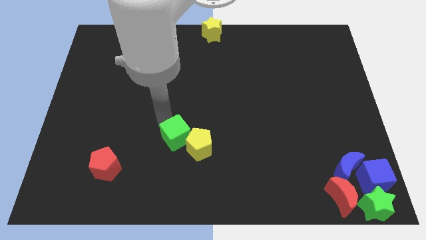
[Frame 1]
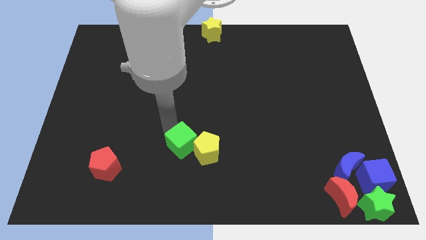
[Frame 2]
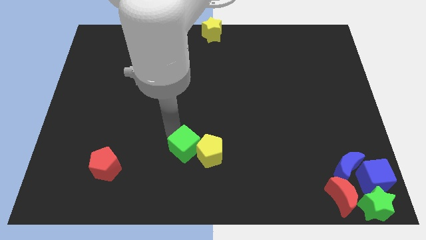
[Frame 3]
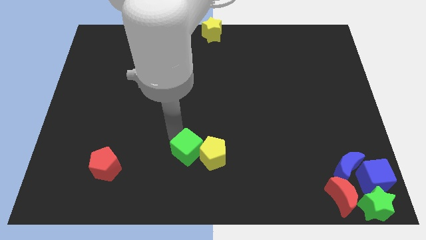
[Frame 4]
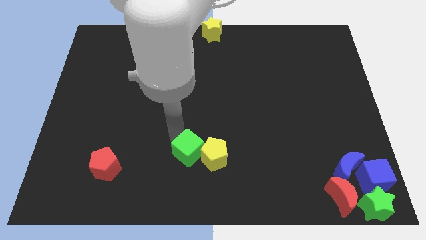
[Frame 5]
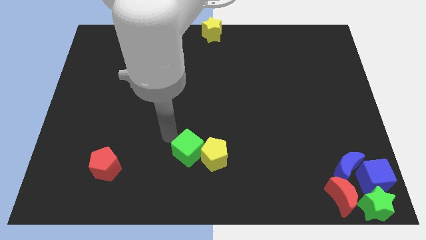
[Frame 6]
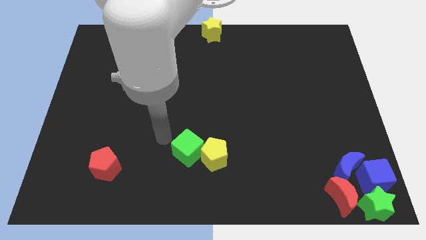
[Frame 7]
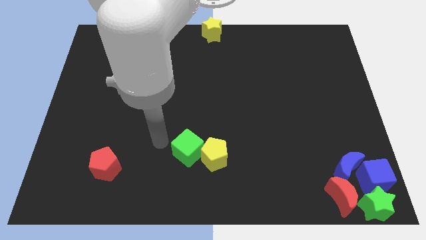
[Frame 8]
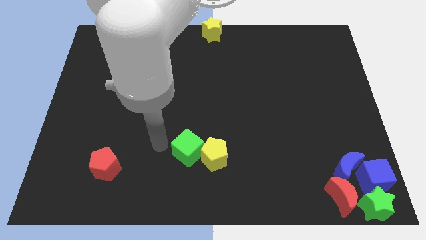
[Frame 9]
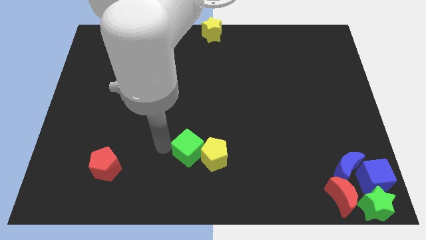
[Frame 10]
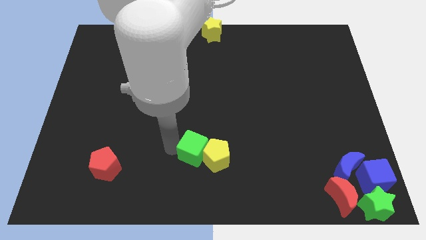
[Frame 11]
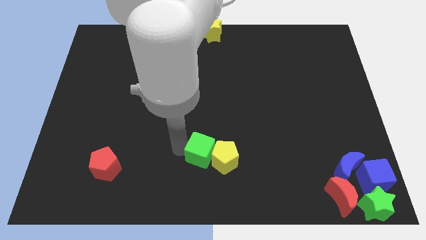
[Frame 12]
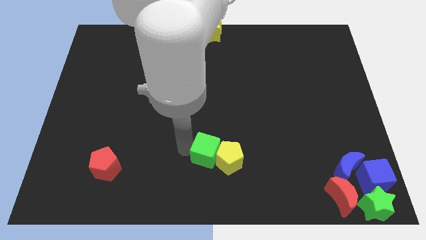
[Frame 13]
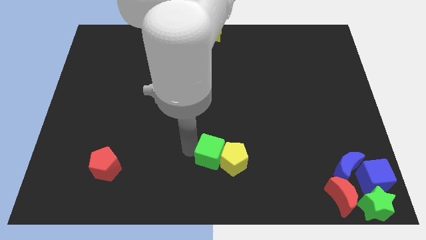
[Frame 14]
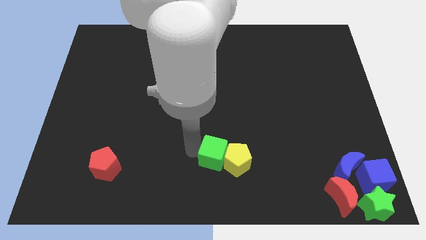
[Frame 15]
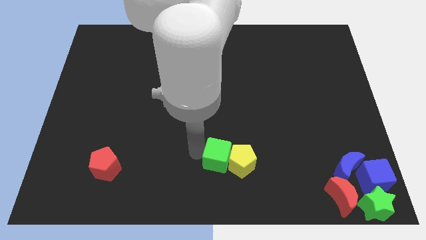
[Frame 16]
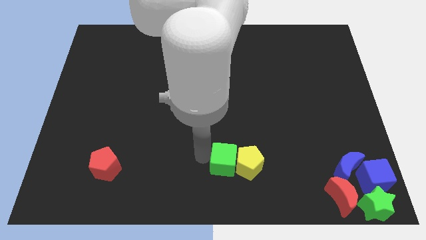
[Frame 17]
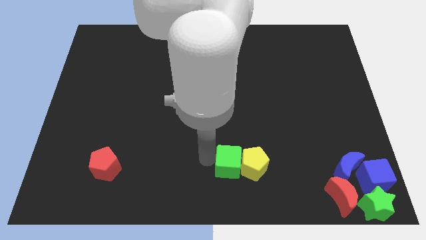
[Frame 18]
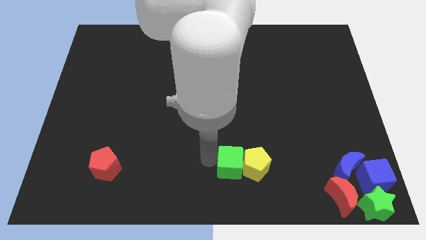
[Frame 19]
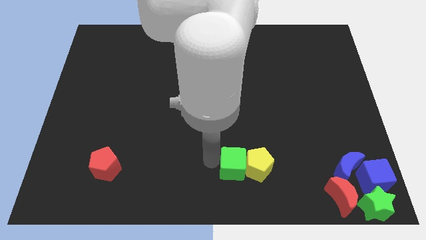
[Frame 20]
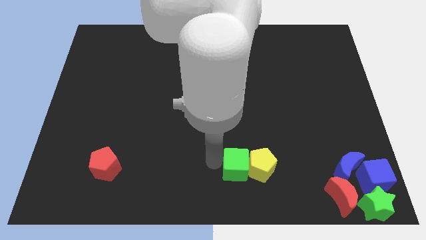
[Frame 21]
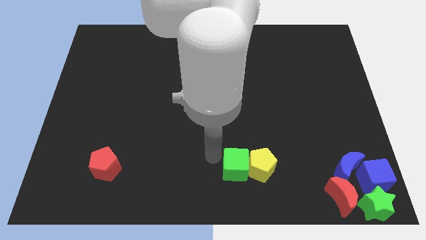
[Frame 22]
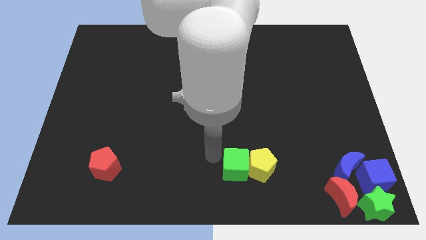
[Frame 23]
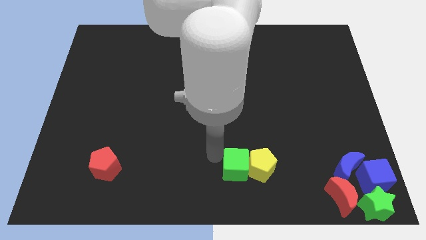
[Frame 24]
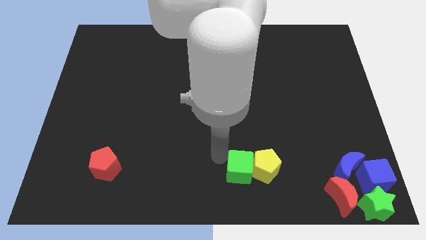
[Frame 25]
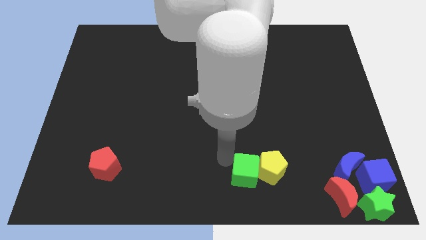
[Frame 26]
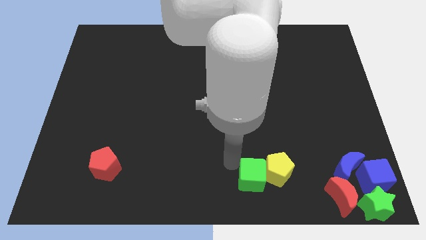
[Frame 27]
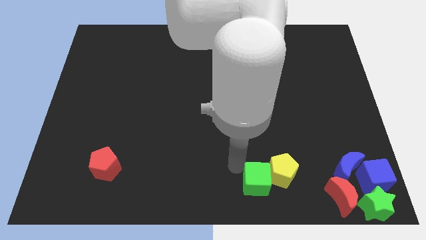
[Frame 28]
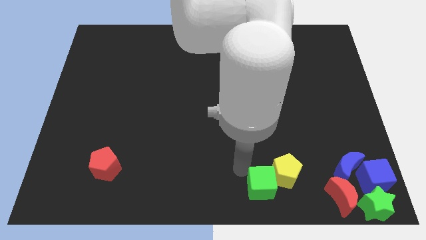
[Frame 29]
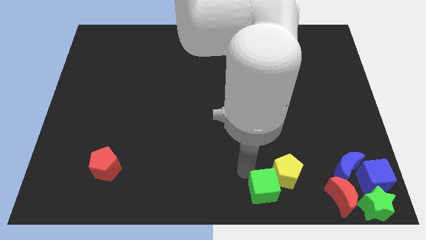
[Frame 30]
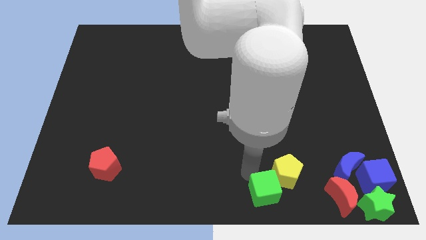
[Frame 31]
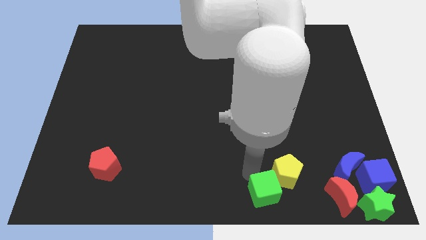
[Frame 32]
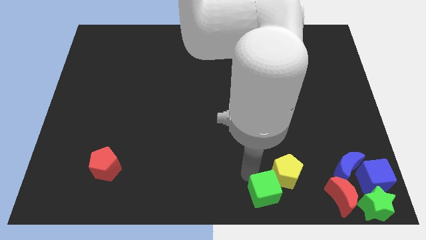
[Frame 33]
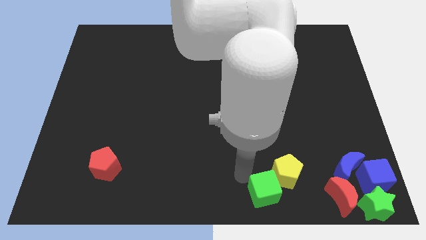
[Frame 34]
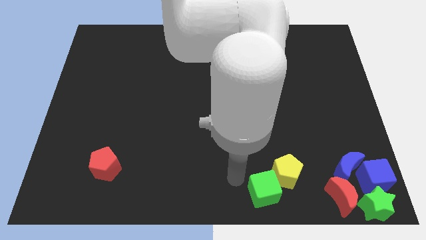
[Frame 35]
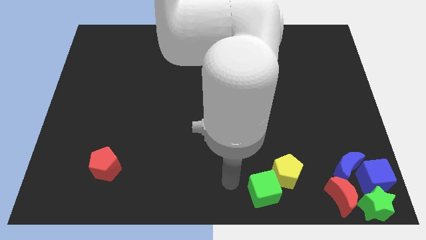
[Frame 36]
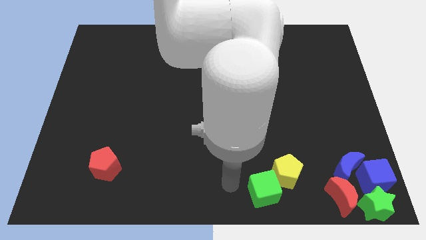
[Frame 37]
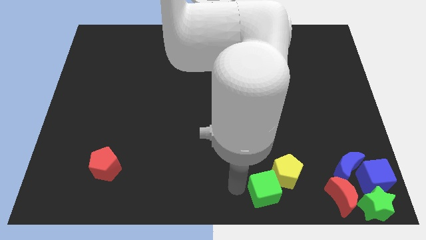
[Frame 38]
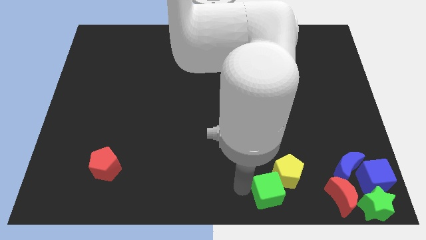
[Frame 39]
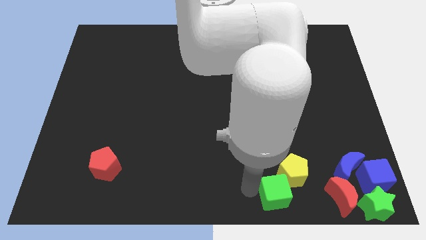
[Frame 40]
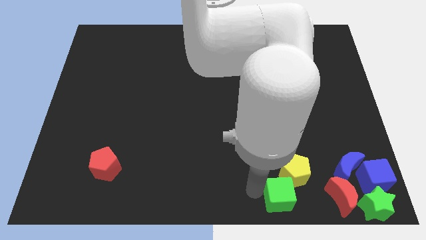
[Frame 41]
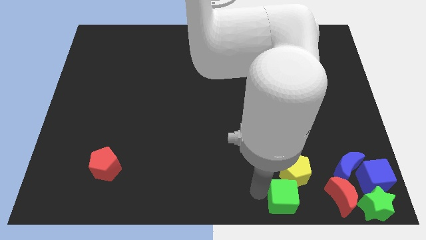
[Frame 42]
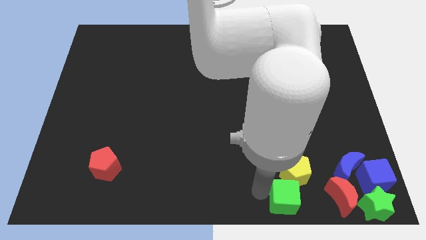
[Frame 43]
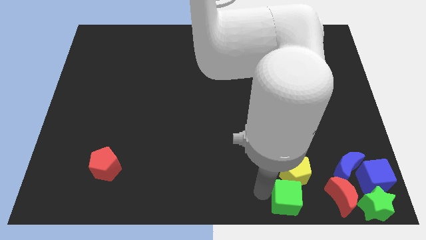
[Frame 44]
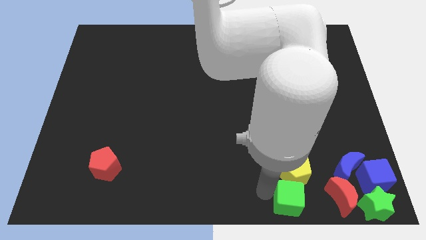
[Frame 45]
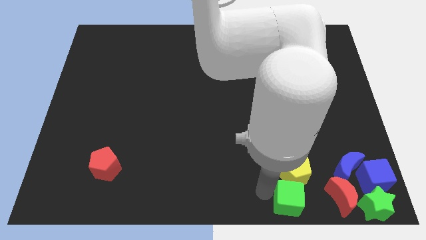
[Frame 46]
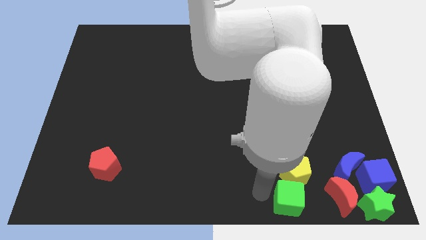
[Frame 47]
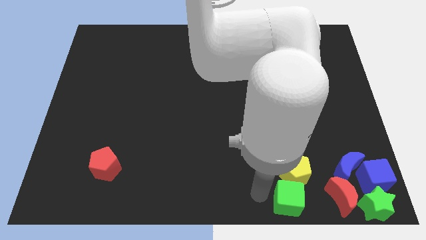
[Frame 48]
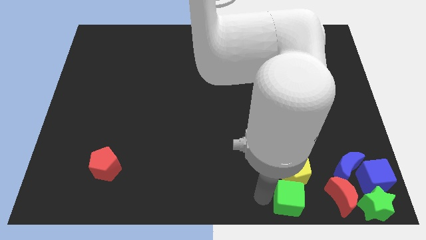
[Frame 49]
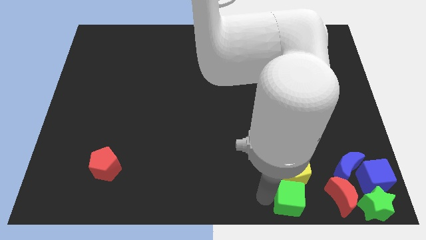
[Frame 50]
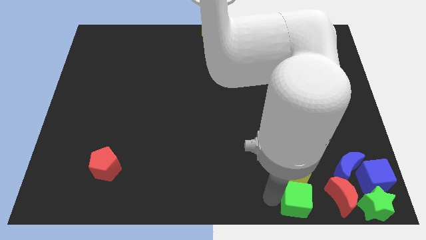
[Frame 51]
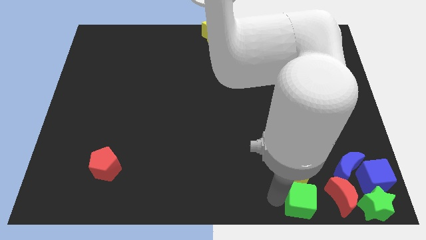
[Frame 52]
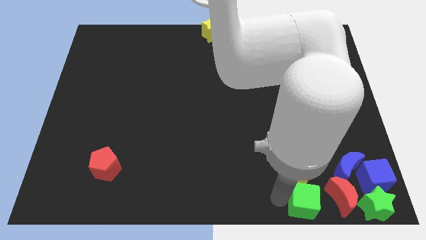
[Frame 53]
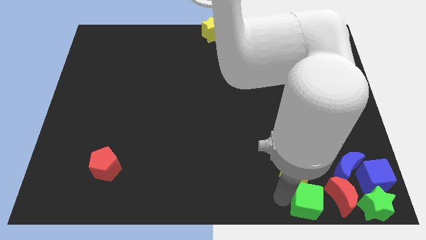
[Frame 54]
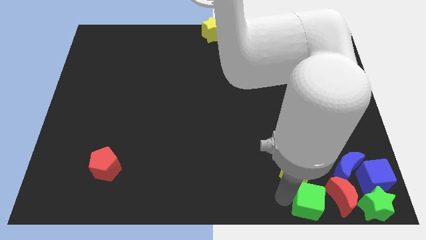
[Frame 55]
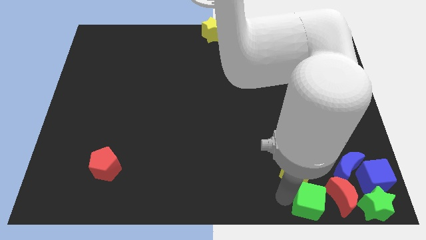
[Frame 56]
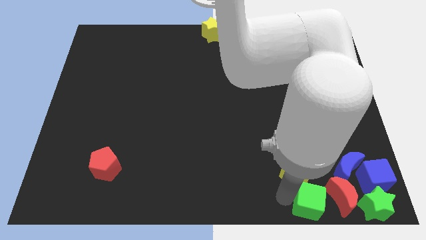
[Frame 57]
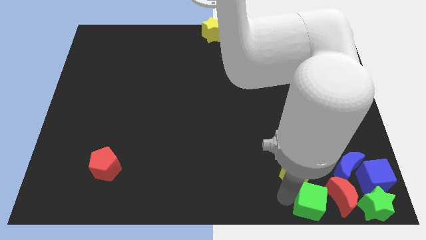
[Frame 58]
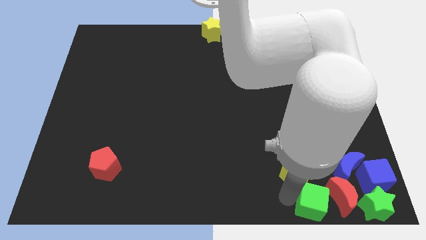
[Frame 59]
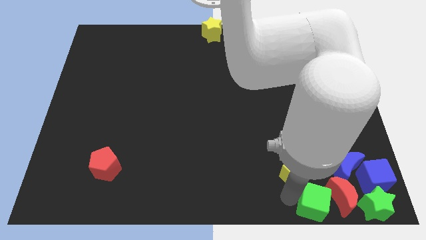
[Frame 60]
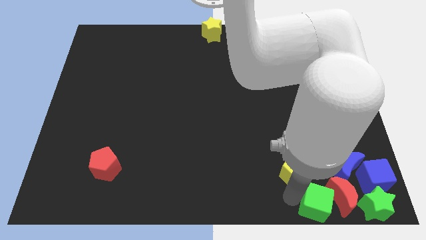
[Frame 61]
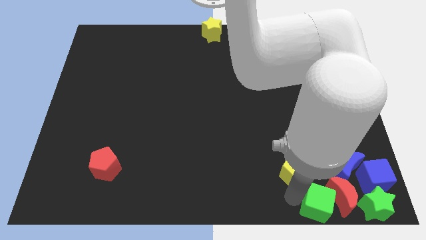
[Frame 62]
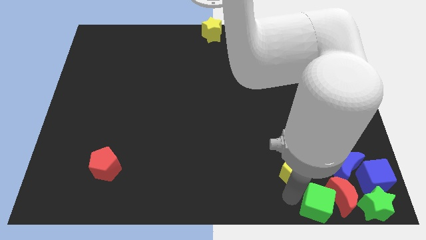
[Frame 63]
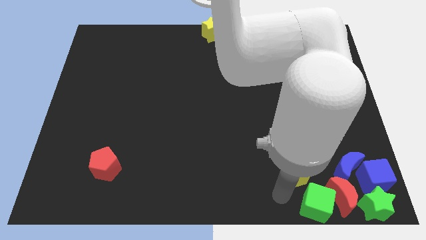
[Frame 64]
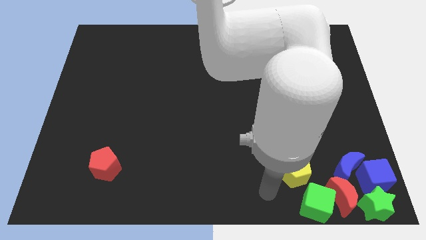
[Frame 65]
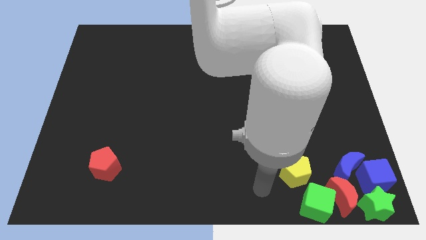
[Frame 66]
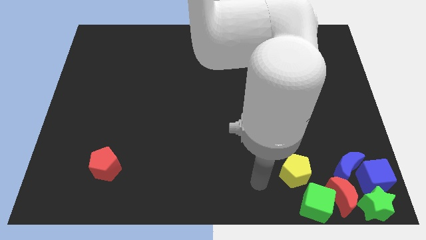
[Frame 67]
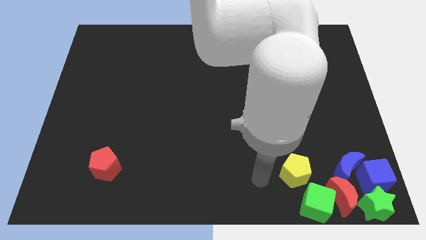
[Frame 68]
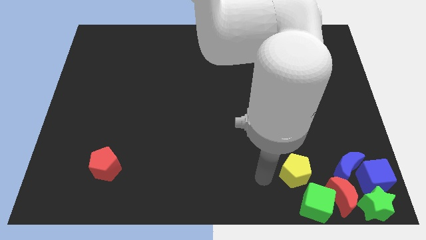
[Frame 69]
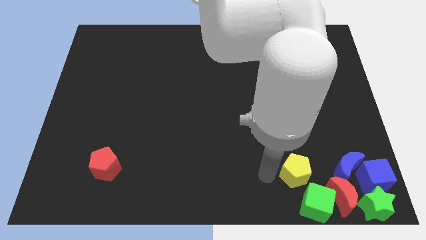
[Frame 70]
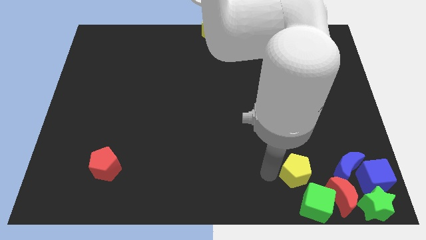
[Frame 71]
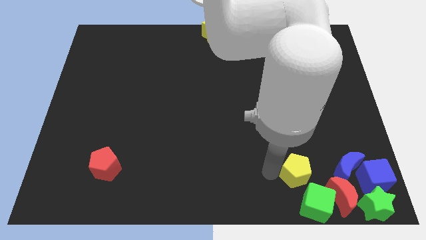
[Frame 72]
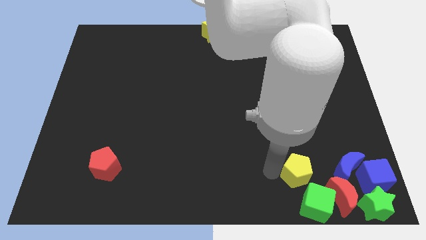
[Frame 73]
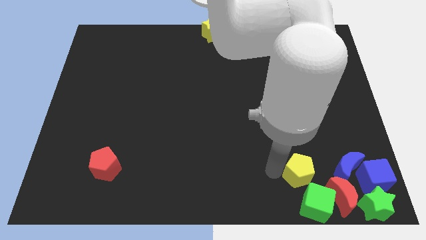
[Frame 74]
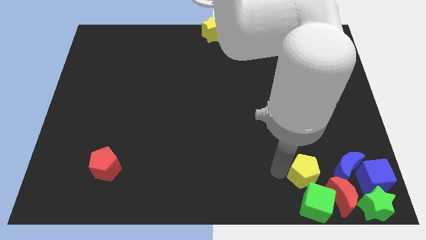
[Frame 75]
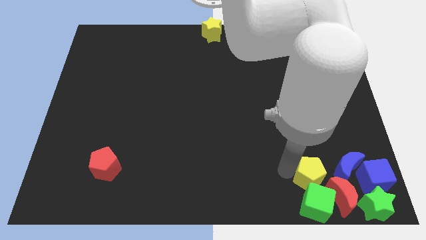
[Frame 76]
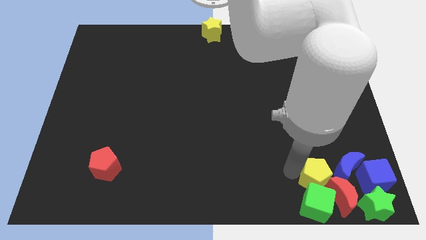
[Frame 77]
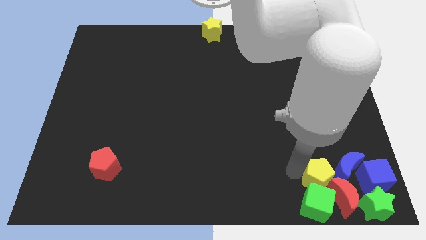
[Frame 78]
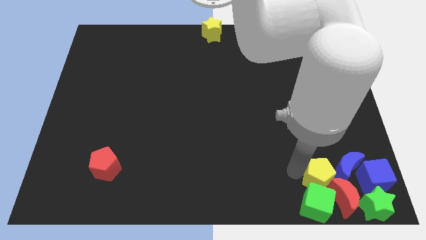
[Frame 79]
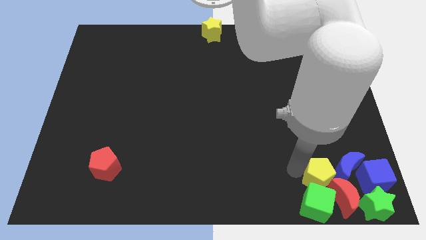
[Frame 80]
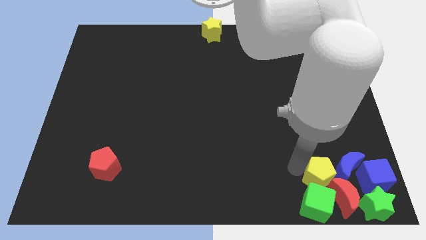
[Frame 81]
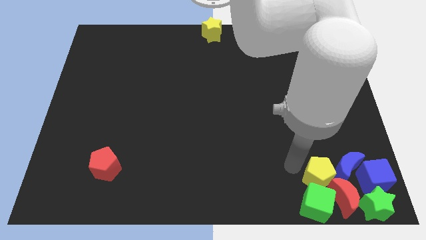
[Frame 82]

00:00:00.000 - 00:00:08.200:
move the yellow pentagon and green cube left beside the red and blue moon

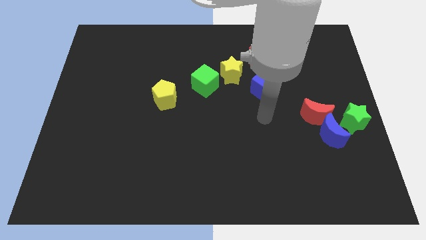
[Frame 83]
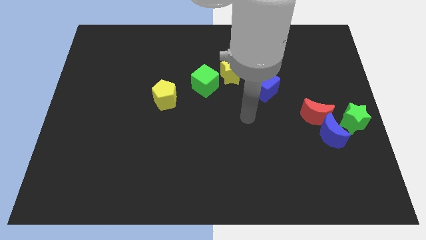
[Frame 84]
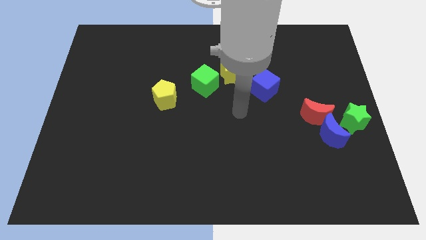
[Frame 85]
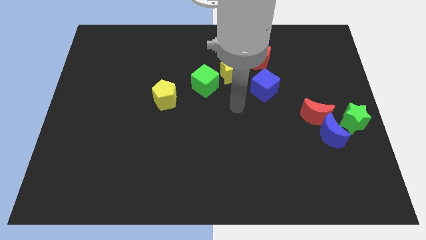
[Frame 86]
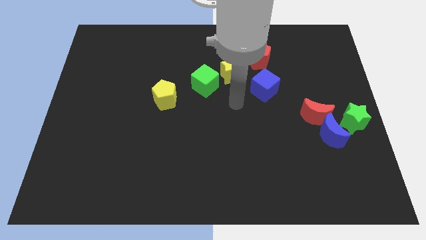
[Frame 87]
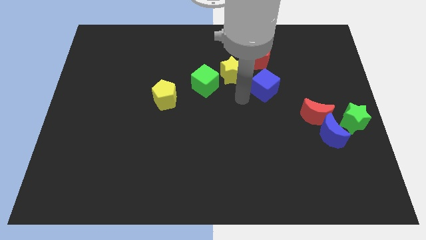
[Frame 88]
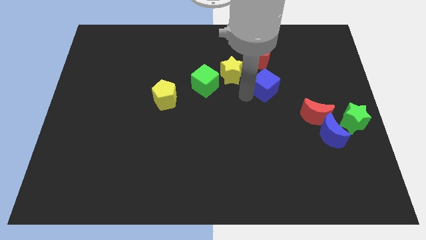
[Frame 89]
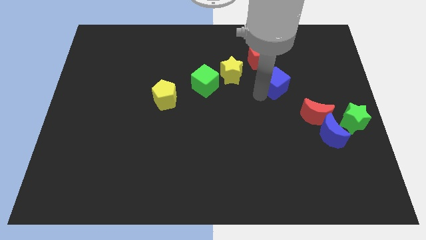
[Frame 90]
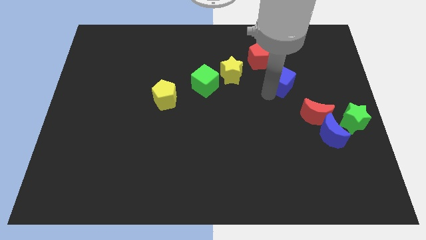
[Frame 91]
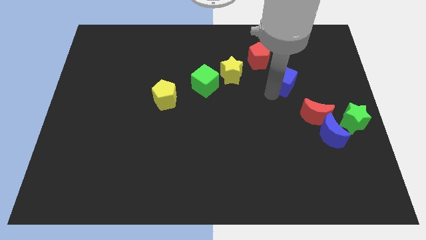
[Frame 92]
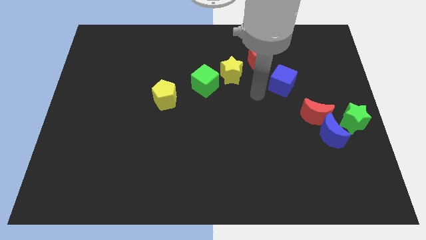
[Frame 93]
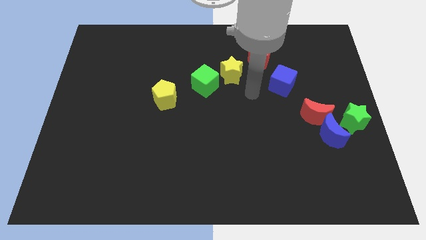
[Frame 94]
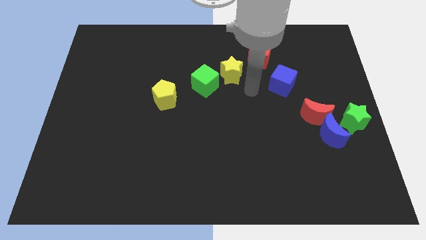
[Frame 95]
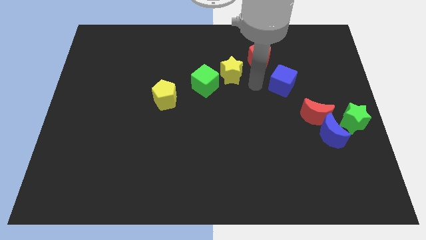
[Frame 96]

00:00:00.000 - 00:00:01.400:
slide the blue cube slightly to the right
